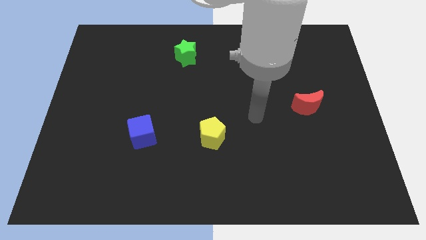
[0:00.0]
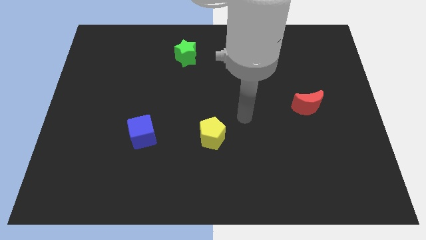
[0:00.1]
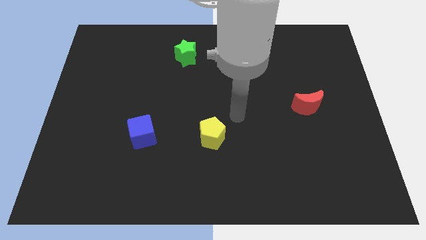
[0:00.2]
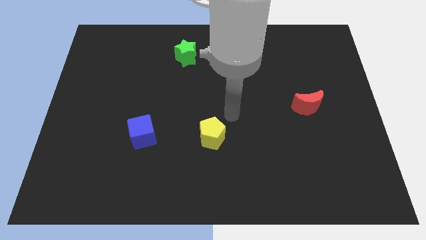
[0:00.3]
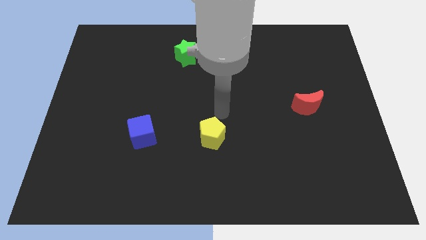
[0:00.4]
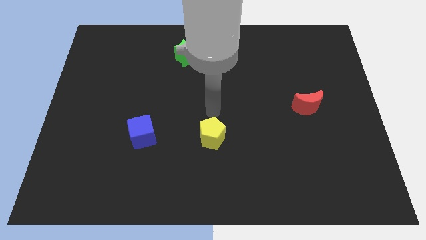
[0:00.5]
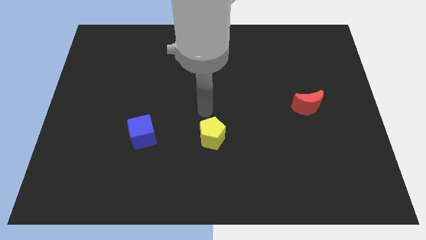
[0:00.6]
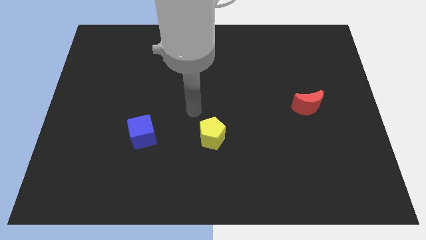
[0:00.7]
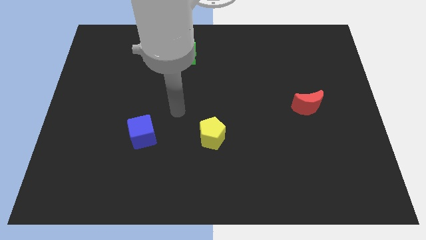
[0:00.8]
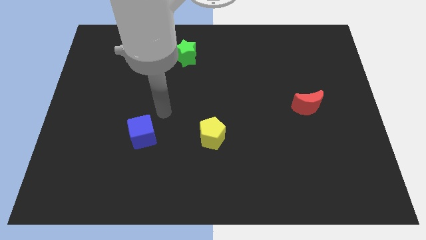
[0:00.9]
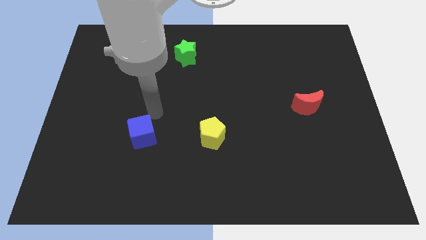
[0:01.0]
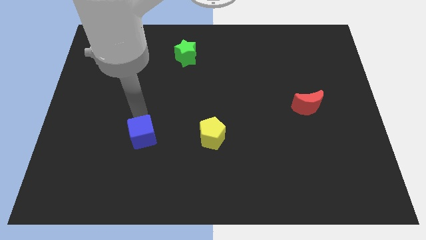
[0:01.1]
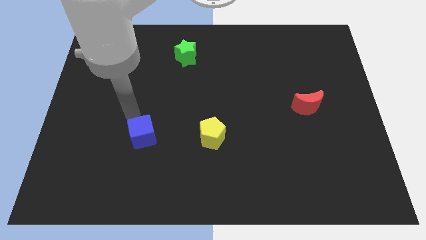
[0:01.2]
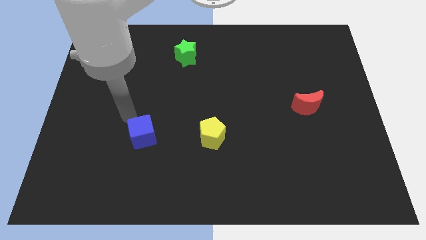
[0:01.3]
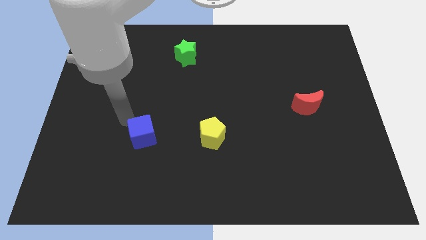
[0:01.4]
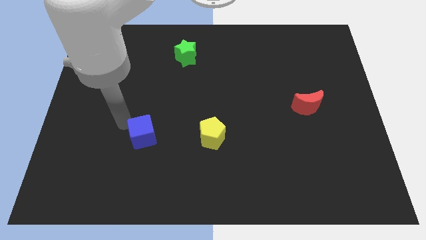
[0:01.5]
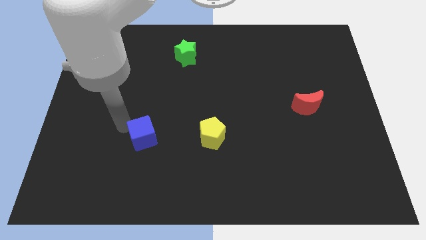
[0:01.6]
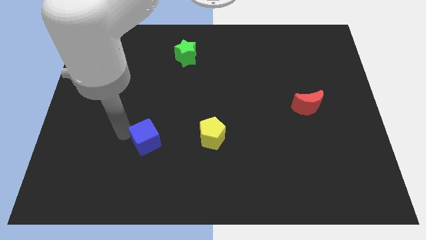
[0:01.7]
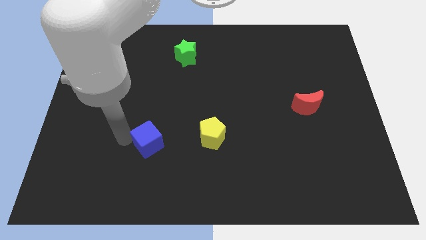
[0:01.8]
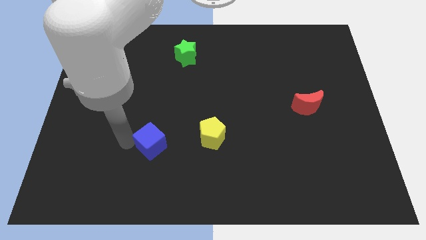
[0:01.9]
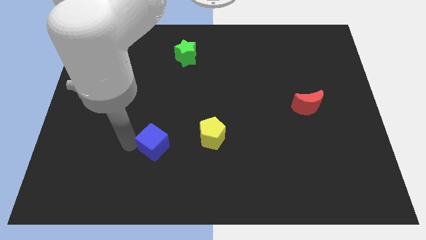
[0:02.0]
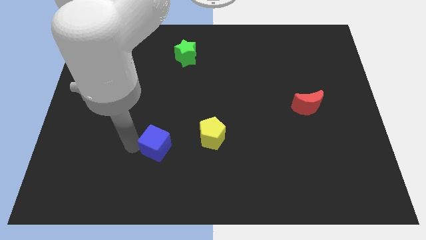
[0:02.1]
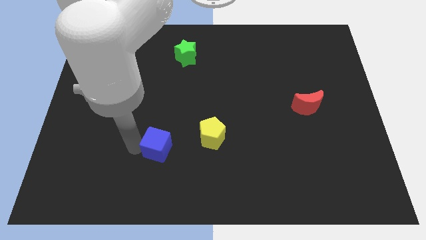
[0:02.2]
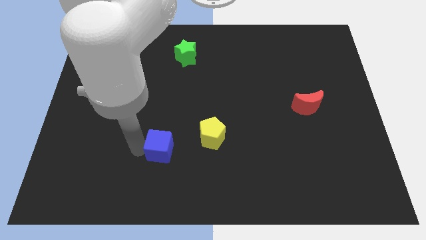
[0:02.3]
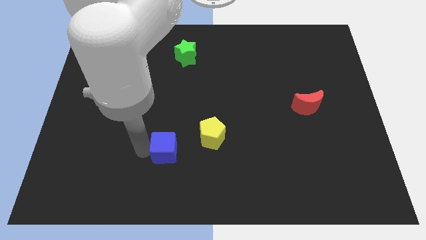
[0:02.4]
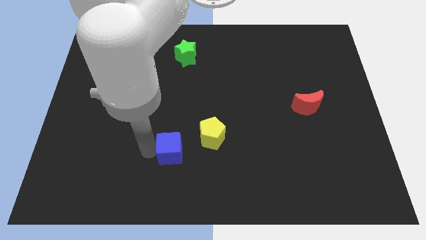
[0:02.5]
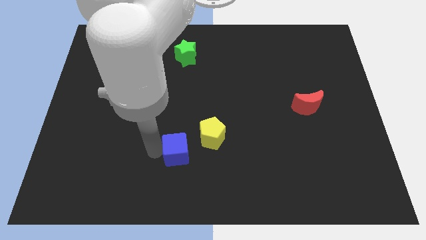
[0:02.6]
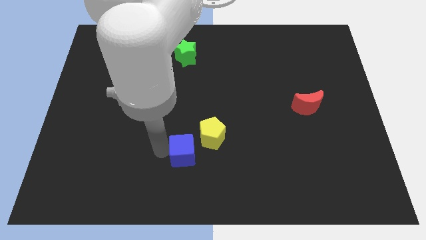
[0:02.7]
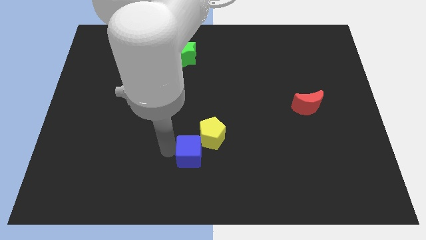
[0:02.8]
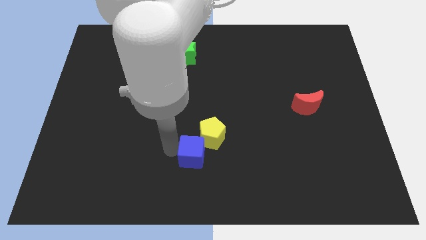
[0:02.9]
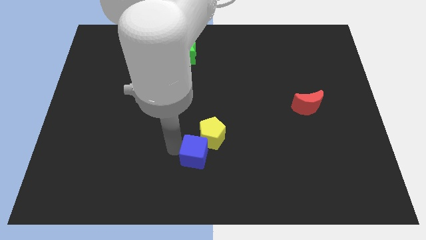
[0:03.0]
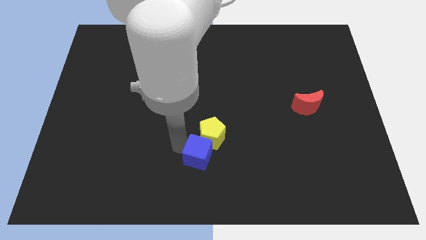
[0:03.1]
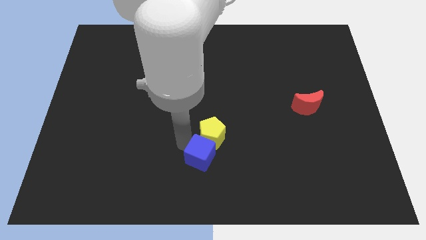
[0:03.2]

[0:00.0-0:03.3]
put the blue cube to the yellow block

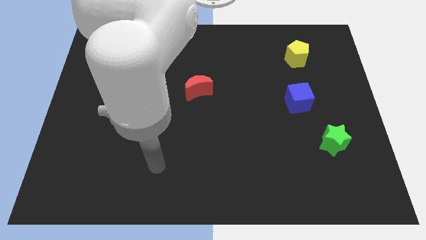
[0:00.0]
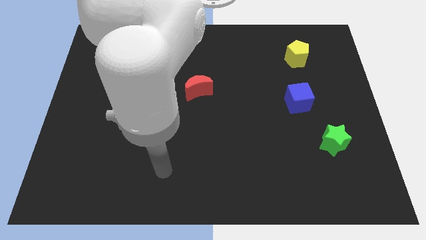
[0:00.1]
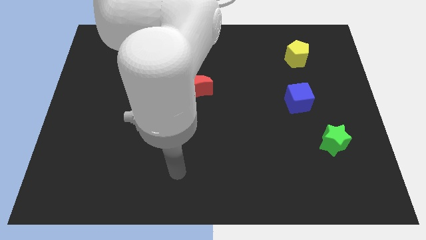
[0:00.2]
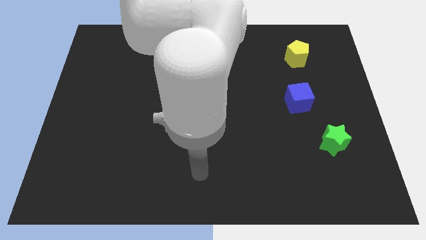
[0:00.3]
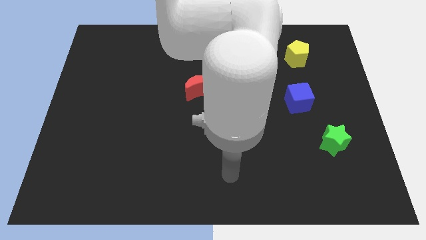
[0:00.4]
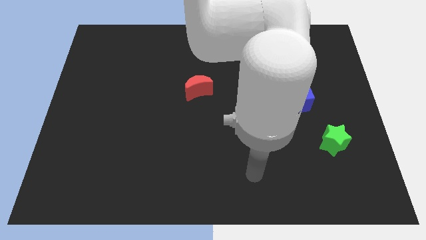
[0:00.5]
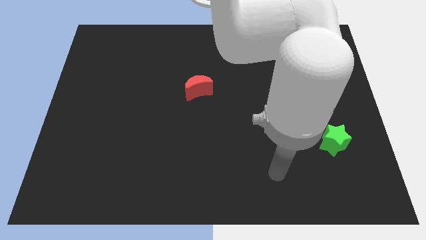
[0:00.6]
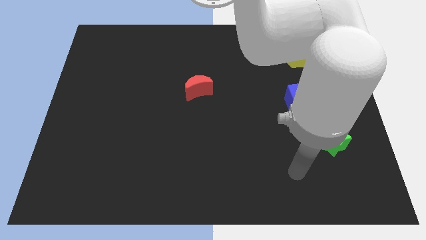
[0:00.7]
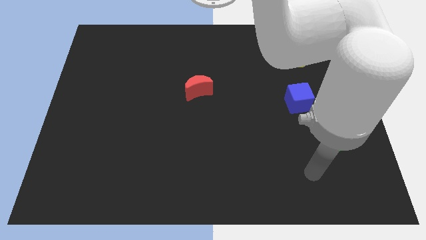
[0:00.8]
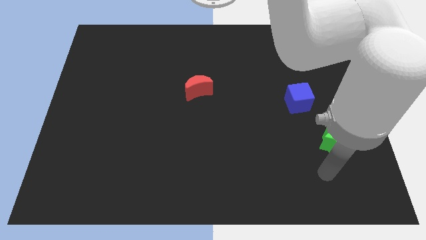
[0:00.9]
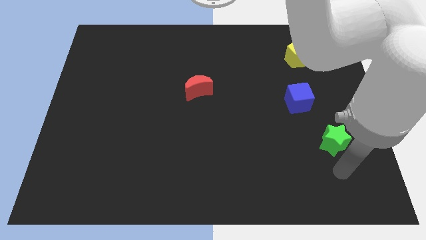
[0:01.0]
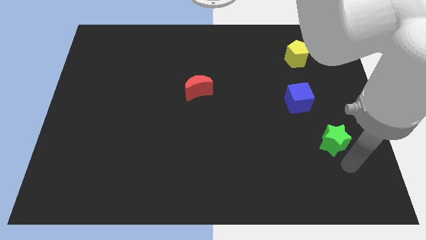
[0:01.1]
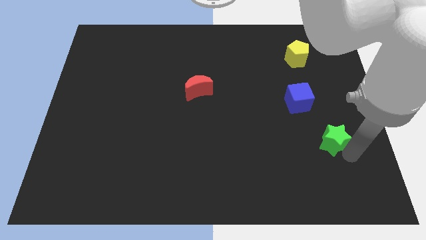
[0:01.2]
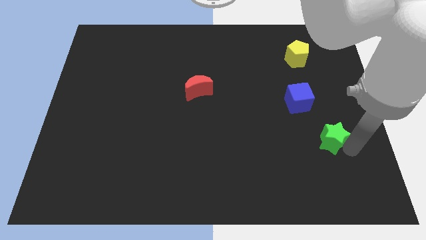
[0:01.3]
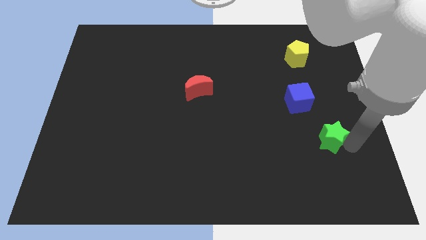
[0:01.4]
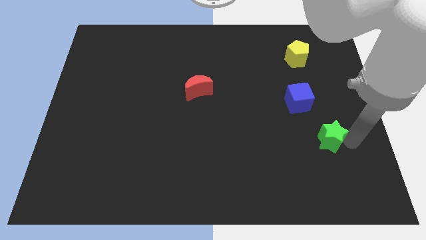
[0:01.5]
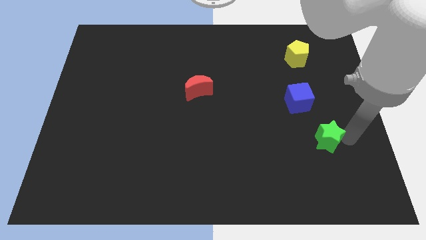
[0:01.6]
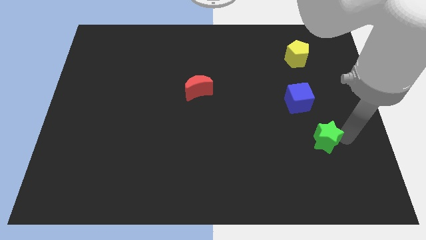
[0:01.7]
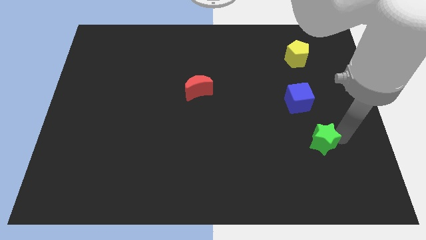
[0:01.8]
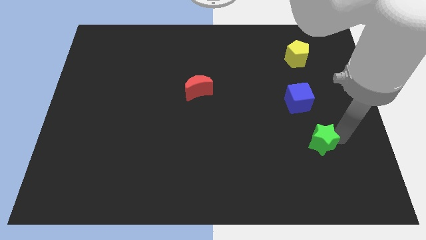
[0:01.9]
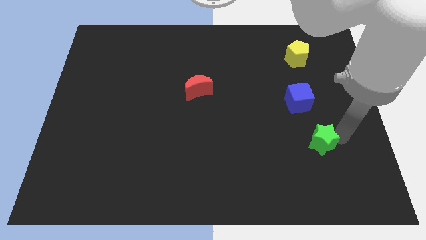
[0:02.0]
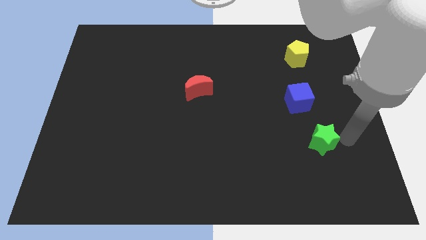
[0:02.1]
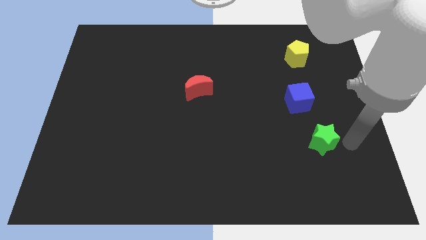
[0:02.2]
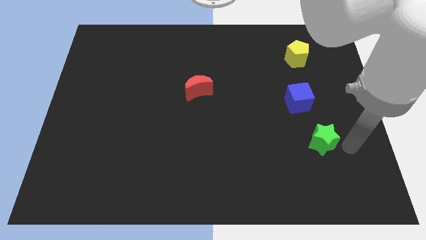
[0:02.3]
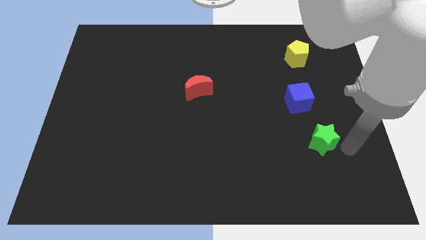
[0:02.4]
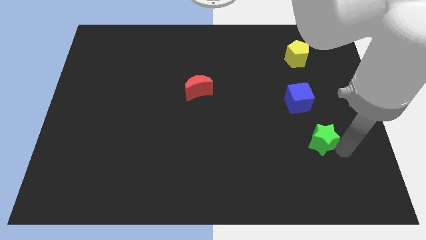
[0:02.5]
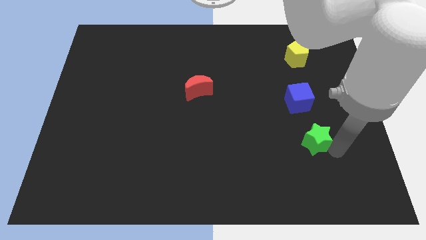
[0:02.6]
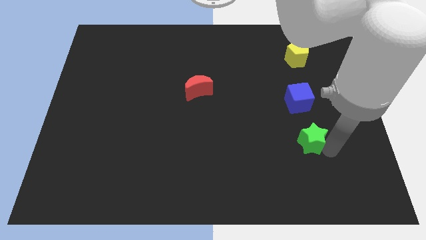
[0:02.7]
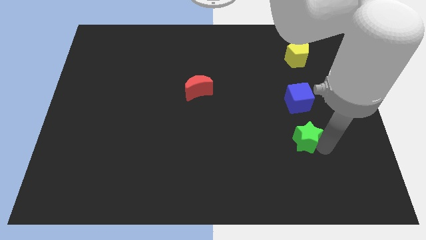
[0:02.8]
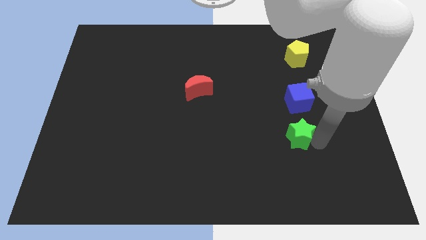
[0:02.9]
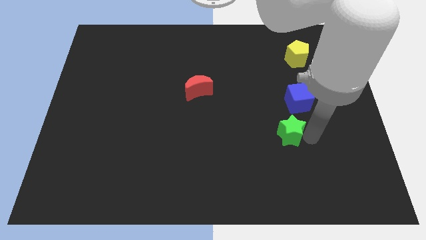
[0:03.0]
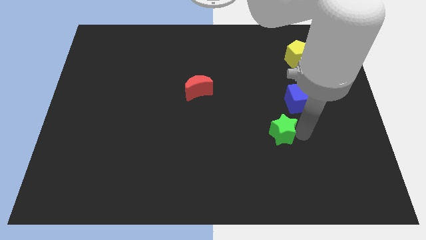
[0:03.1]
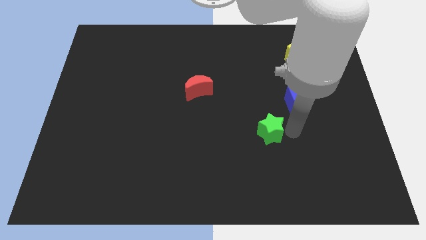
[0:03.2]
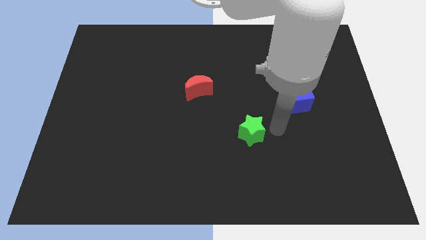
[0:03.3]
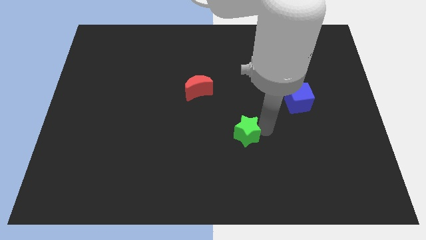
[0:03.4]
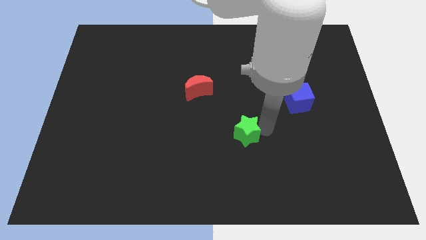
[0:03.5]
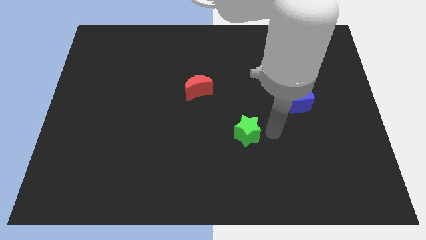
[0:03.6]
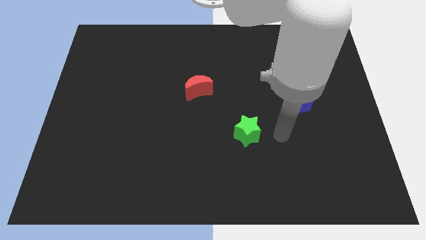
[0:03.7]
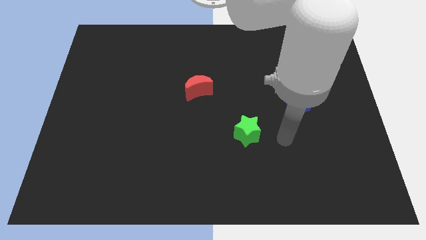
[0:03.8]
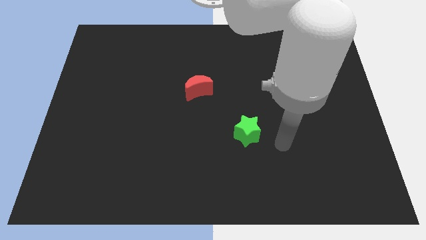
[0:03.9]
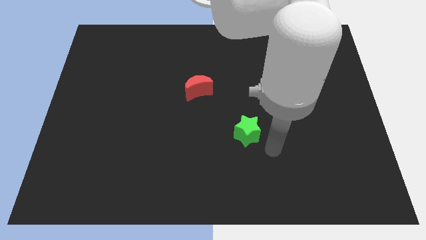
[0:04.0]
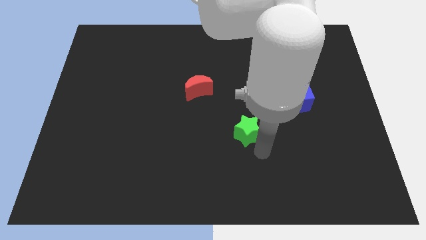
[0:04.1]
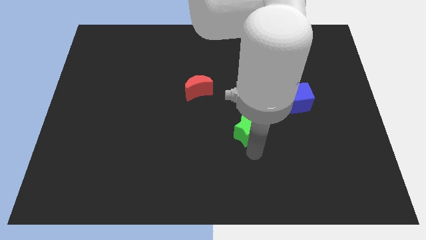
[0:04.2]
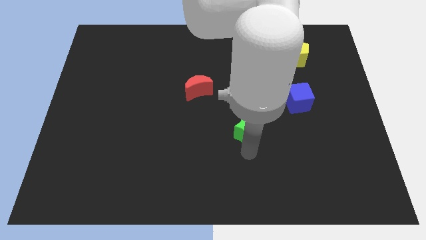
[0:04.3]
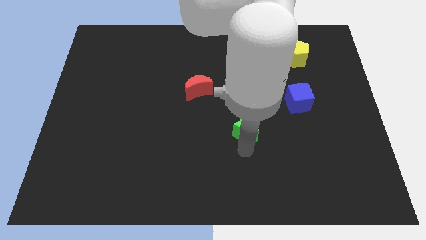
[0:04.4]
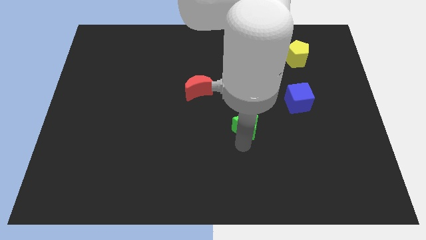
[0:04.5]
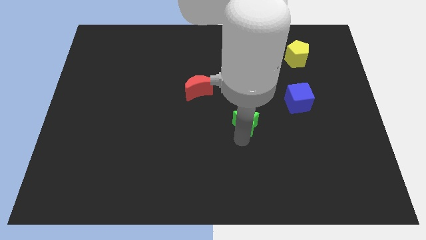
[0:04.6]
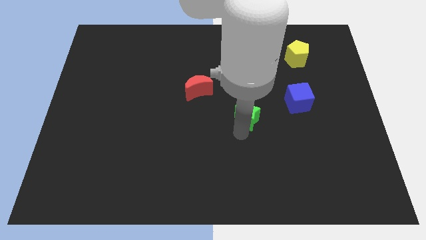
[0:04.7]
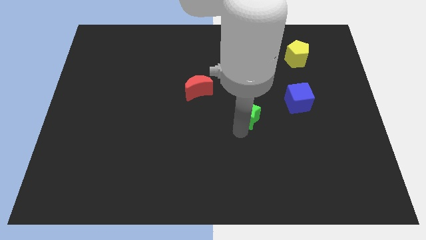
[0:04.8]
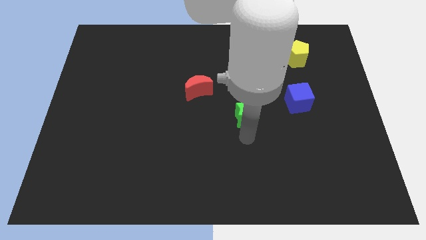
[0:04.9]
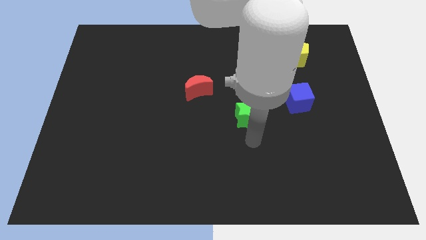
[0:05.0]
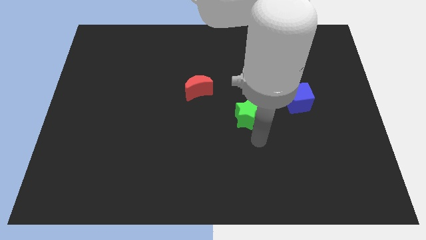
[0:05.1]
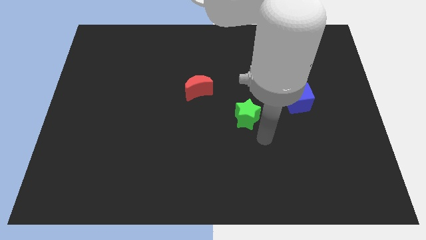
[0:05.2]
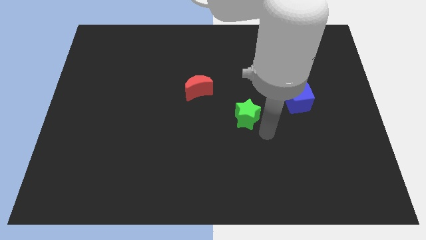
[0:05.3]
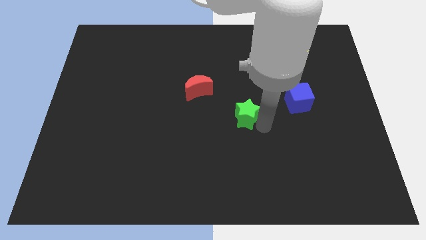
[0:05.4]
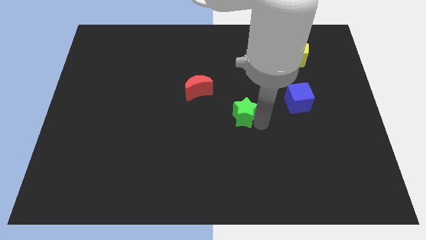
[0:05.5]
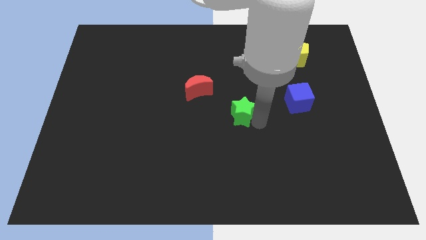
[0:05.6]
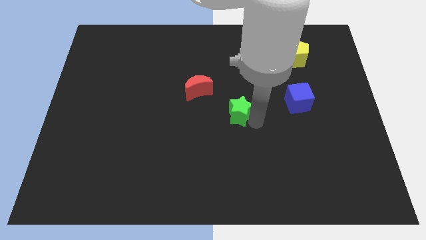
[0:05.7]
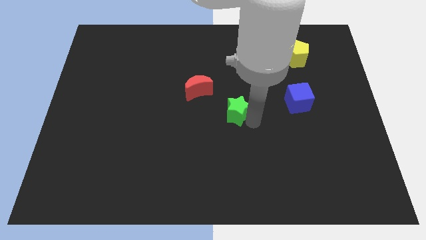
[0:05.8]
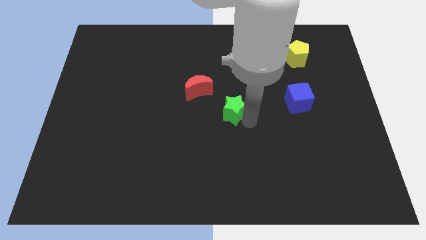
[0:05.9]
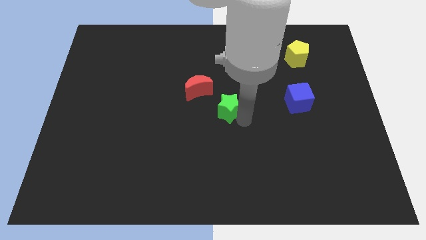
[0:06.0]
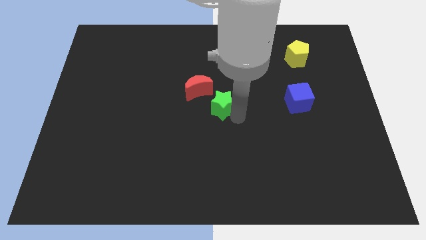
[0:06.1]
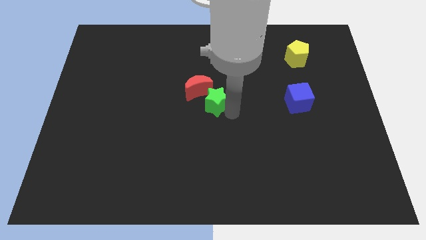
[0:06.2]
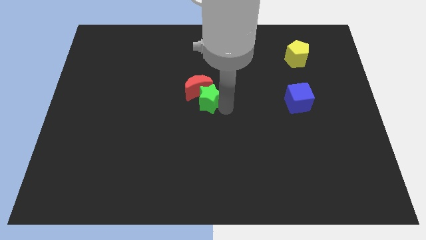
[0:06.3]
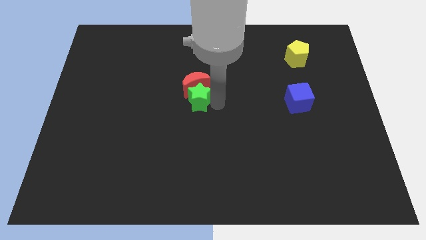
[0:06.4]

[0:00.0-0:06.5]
slide the green star towards the red block
